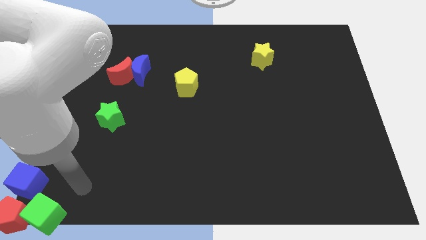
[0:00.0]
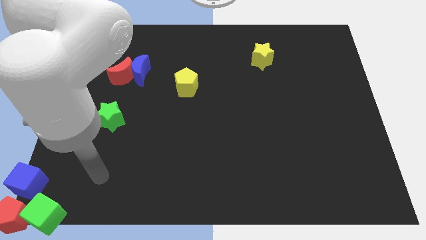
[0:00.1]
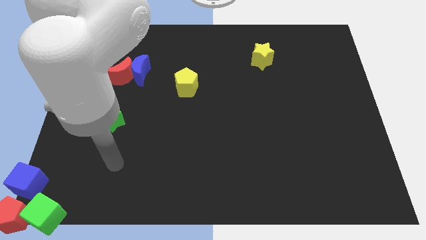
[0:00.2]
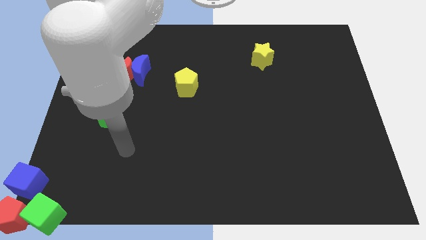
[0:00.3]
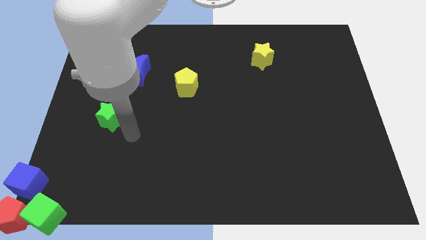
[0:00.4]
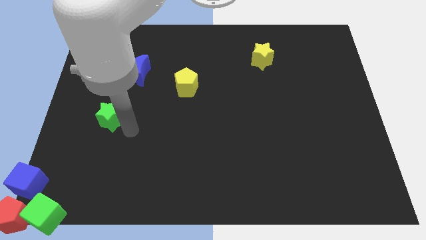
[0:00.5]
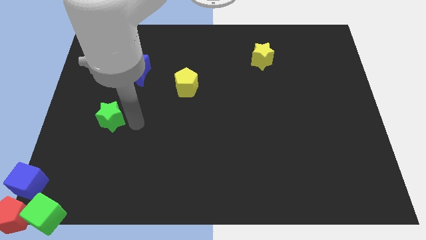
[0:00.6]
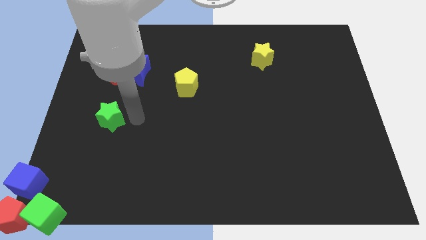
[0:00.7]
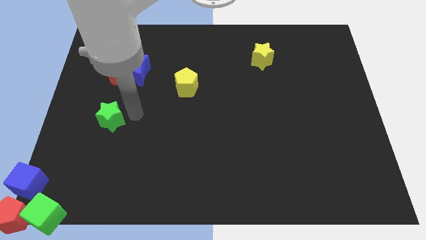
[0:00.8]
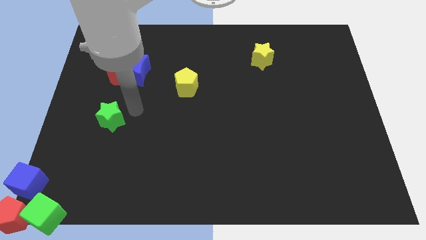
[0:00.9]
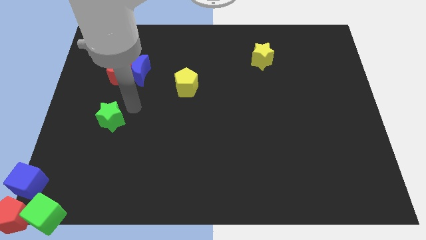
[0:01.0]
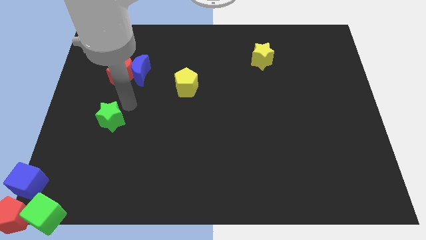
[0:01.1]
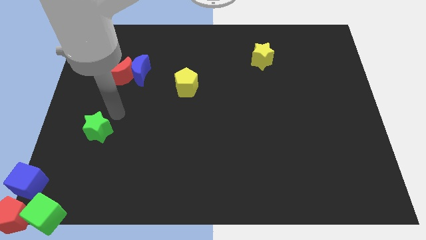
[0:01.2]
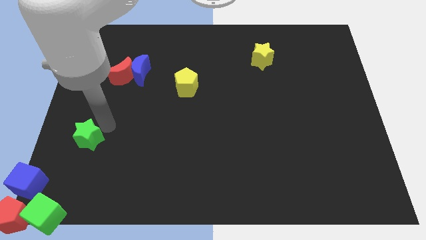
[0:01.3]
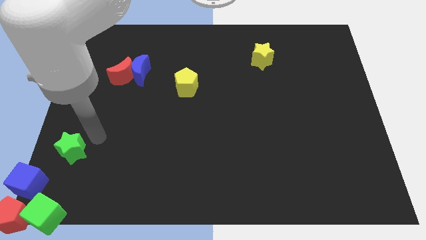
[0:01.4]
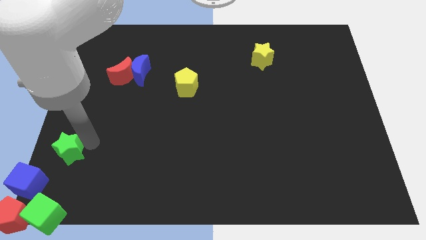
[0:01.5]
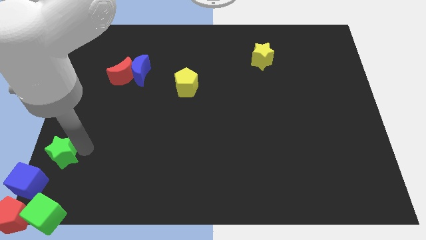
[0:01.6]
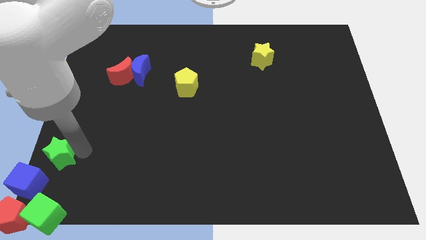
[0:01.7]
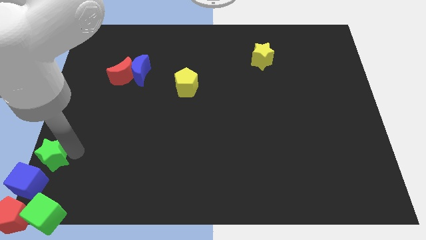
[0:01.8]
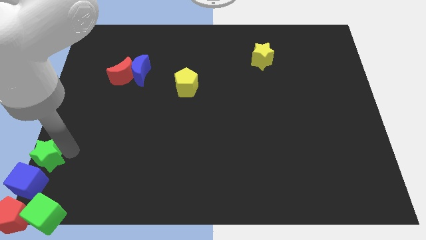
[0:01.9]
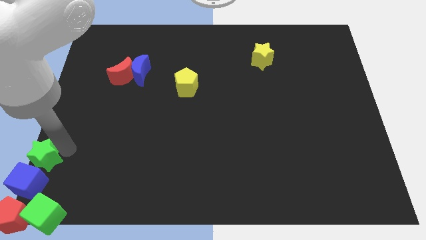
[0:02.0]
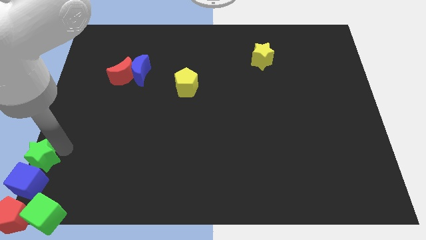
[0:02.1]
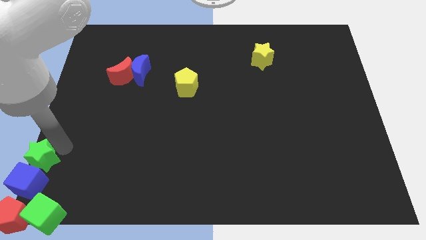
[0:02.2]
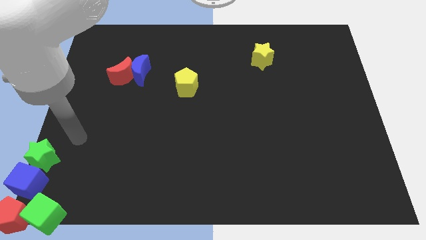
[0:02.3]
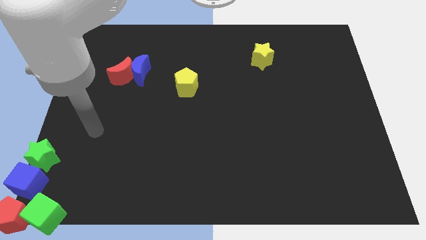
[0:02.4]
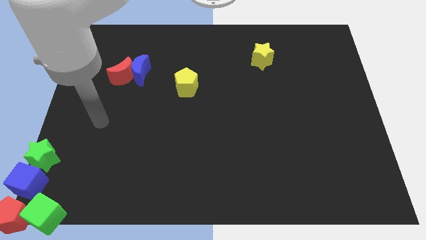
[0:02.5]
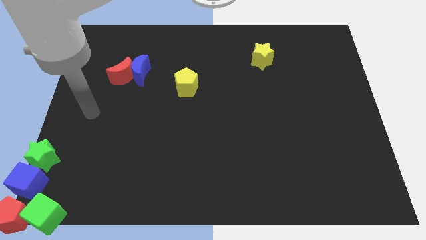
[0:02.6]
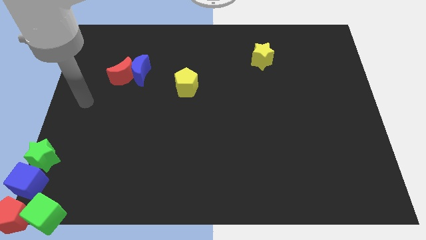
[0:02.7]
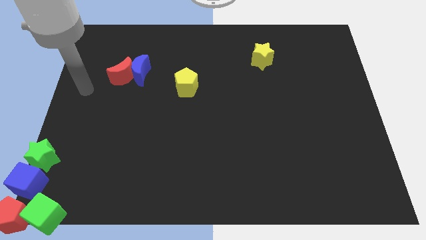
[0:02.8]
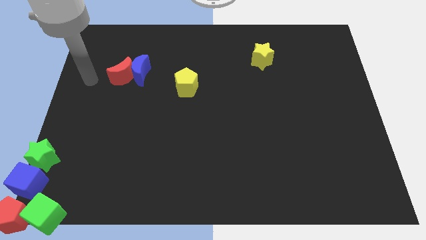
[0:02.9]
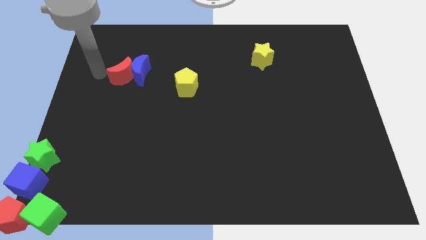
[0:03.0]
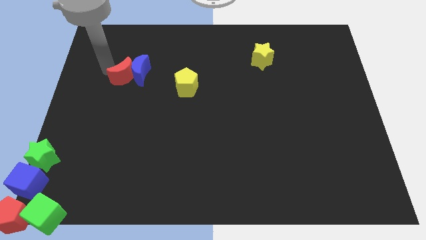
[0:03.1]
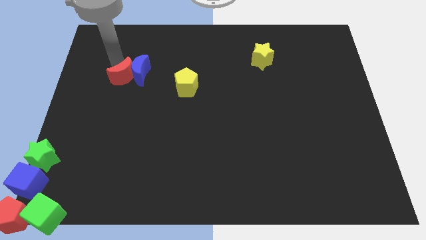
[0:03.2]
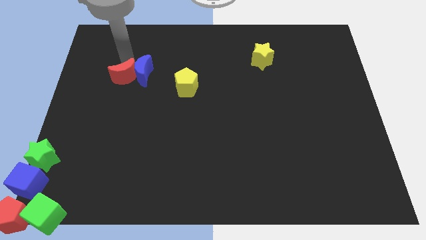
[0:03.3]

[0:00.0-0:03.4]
move the green star to the top of the blue cube

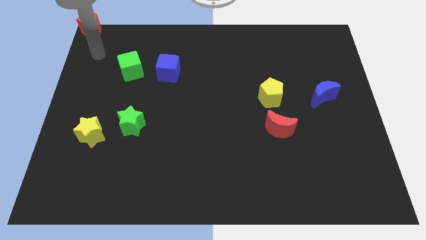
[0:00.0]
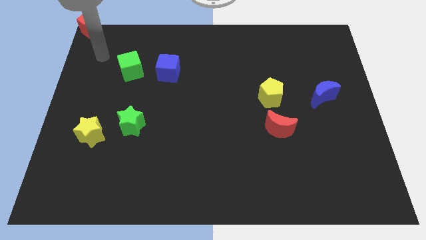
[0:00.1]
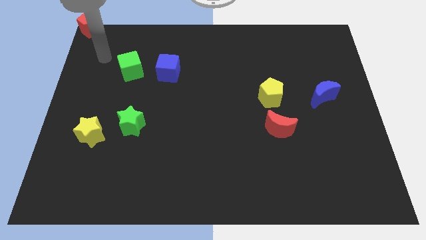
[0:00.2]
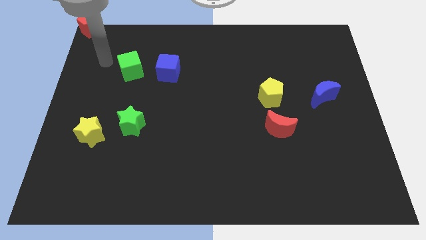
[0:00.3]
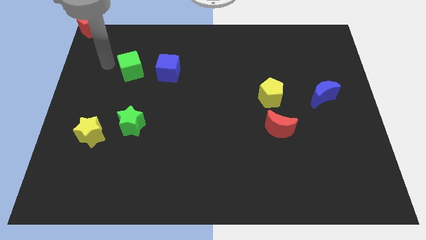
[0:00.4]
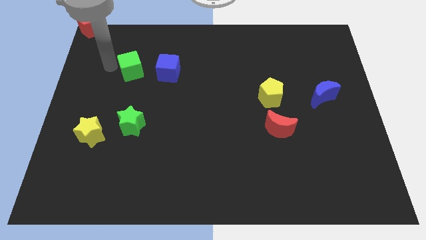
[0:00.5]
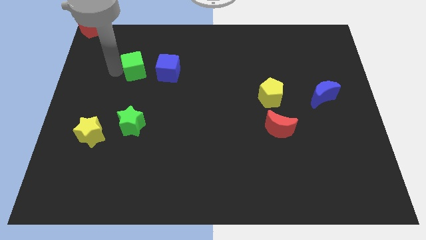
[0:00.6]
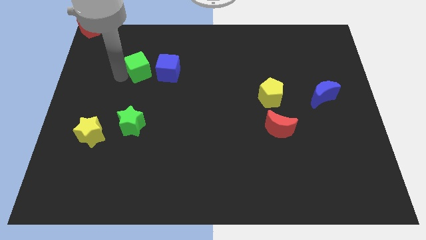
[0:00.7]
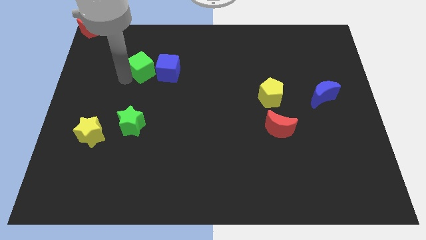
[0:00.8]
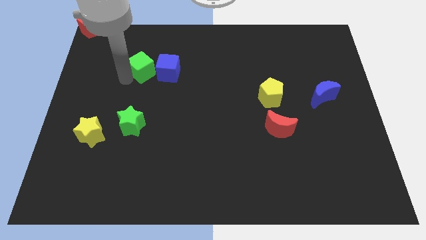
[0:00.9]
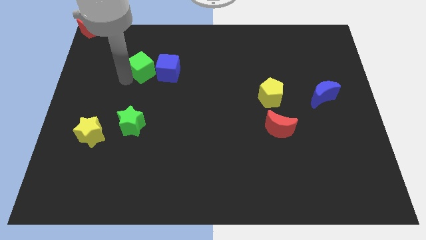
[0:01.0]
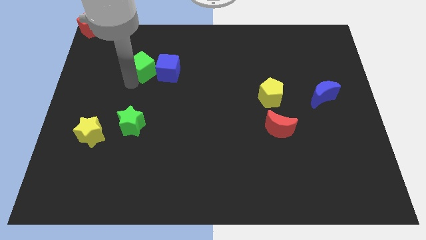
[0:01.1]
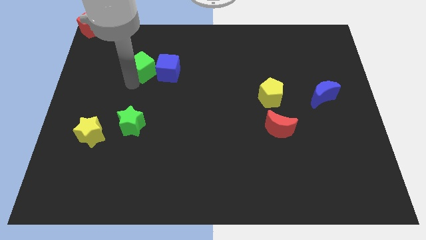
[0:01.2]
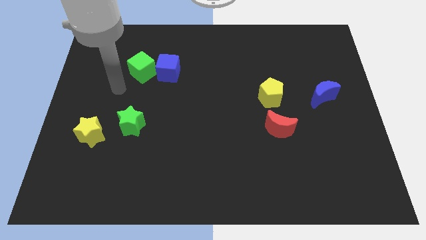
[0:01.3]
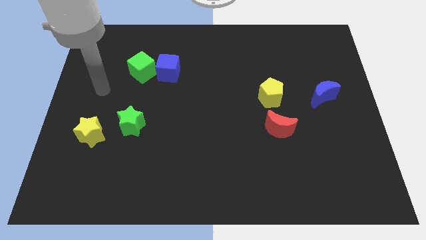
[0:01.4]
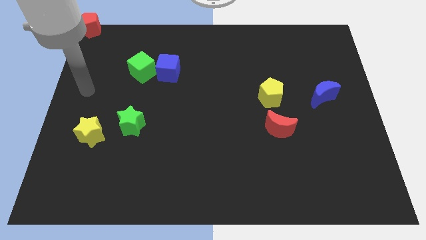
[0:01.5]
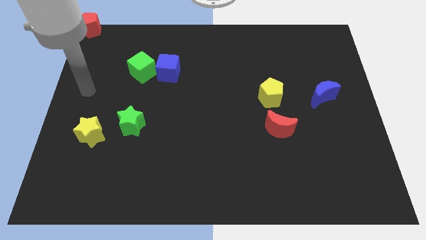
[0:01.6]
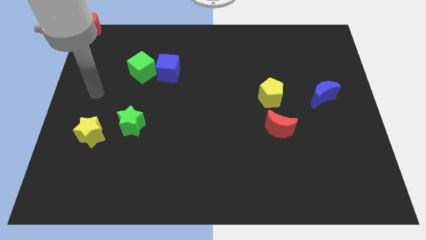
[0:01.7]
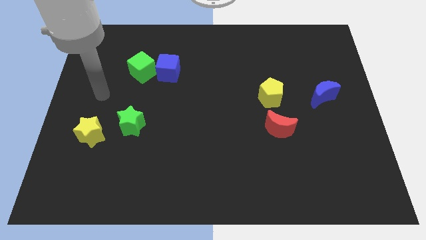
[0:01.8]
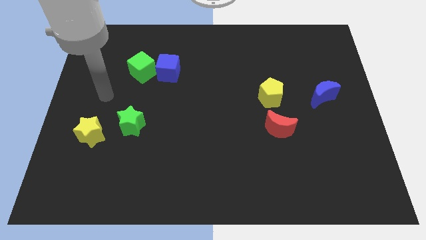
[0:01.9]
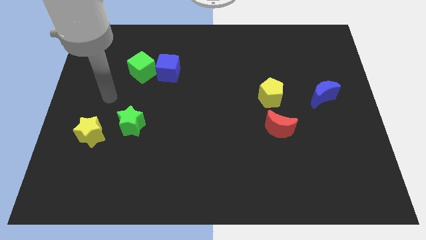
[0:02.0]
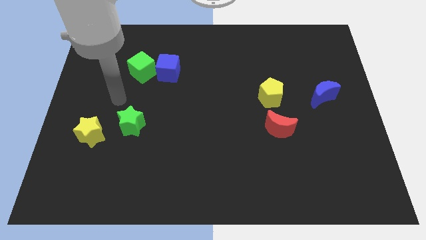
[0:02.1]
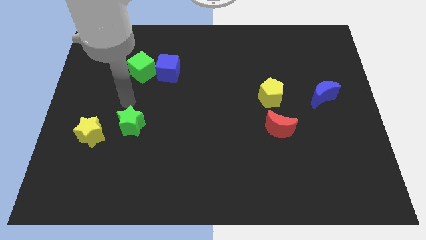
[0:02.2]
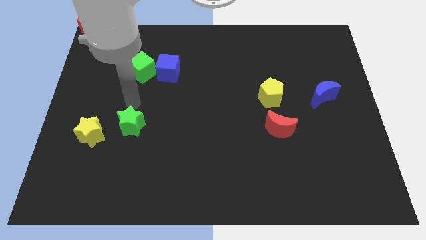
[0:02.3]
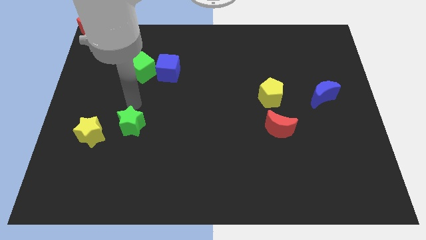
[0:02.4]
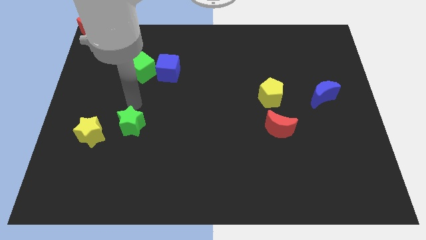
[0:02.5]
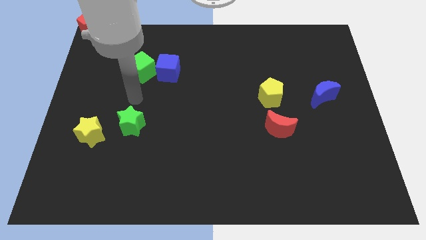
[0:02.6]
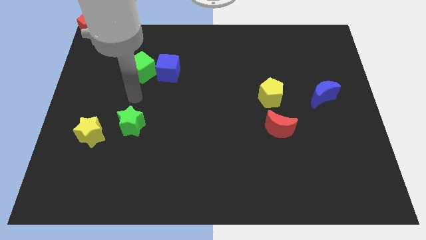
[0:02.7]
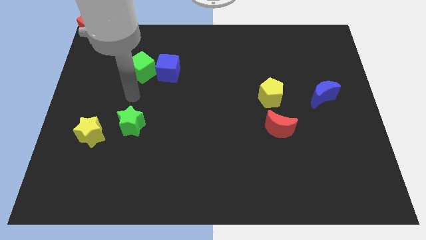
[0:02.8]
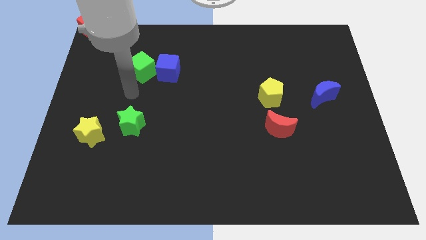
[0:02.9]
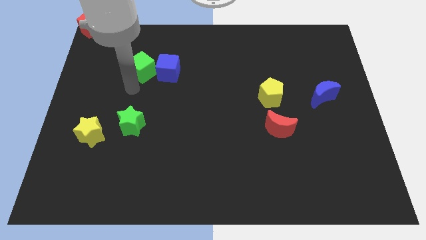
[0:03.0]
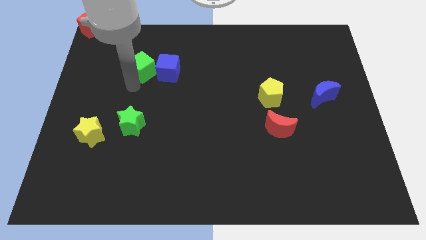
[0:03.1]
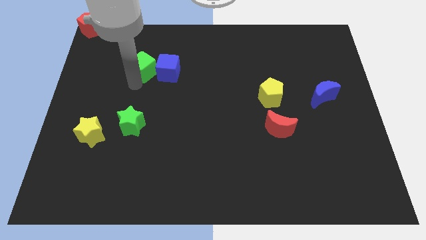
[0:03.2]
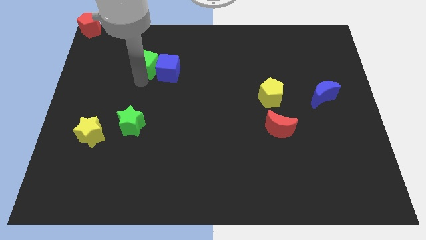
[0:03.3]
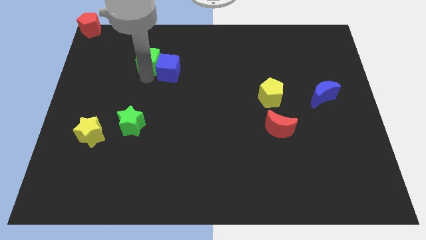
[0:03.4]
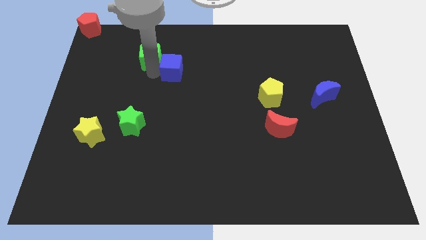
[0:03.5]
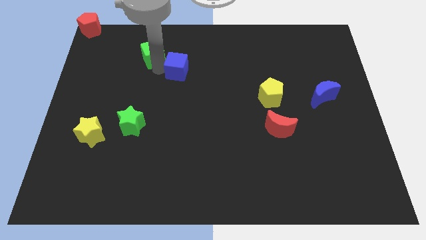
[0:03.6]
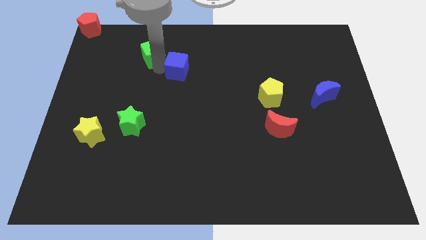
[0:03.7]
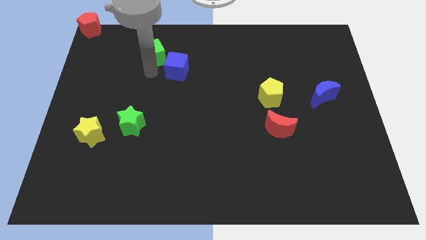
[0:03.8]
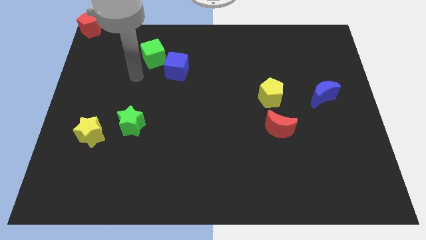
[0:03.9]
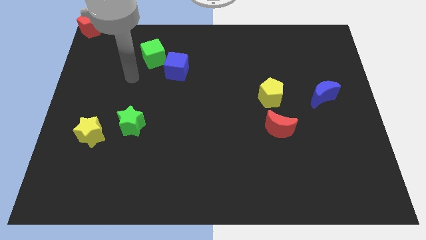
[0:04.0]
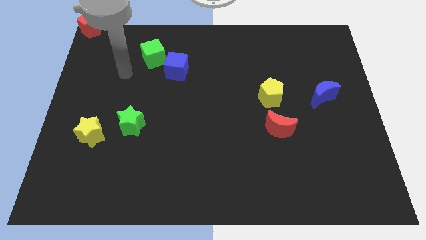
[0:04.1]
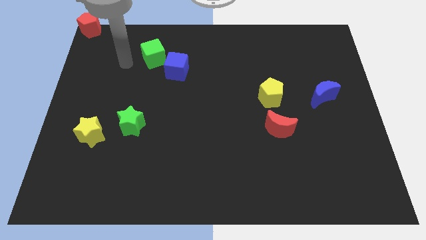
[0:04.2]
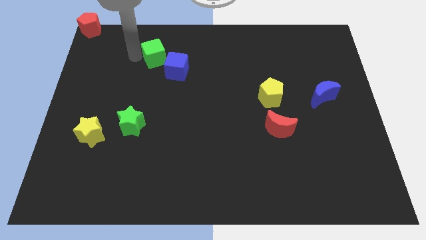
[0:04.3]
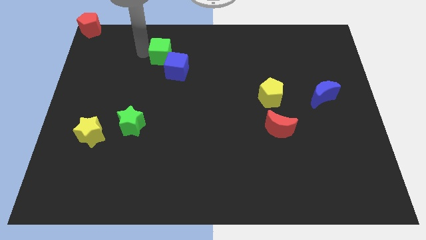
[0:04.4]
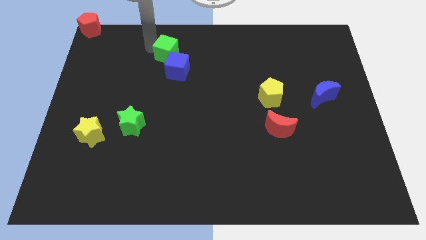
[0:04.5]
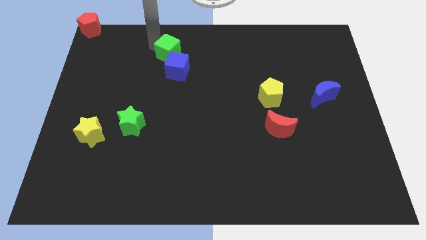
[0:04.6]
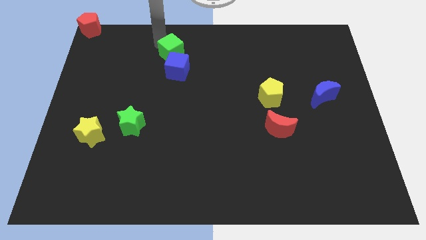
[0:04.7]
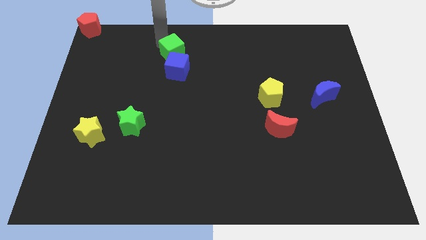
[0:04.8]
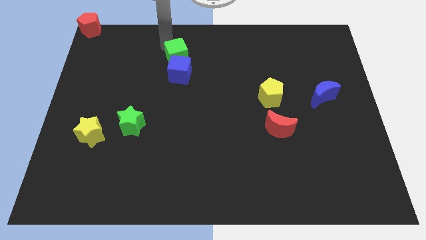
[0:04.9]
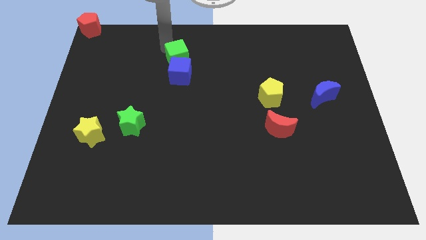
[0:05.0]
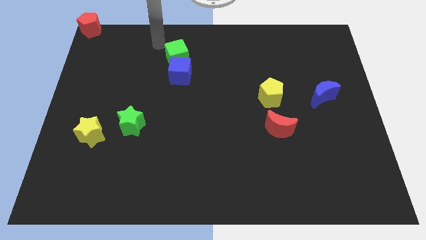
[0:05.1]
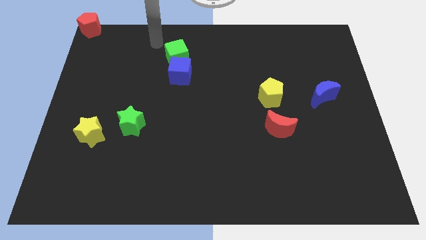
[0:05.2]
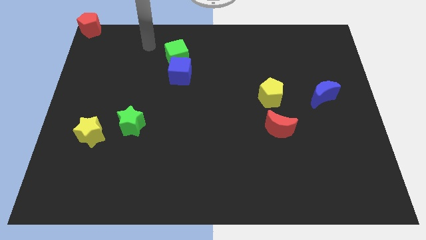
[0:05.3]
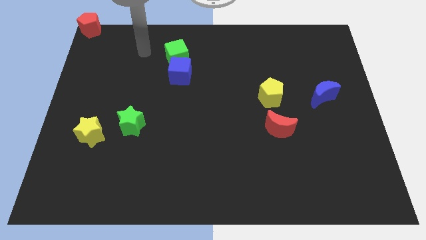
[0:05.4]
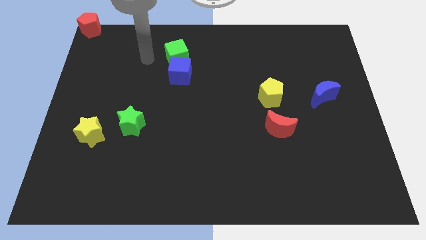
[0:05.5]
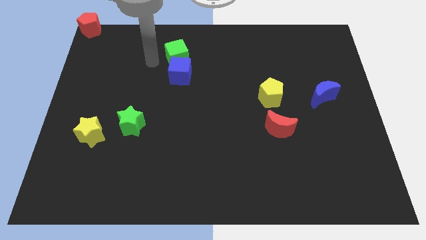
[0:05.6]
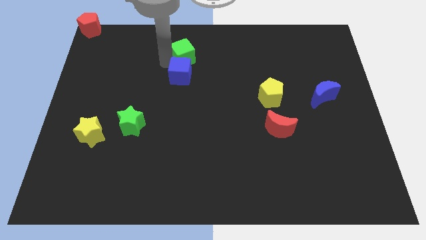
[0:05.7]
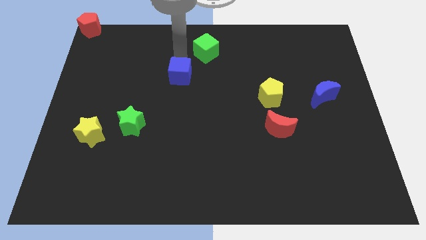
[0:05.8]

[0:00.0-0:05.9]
place the green cube top to the blue cube
